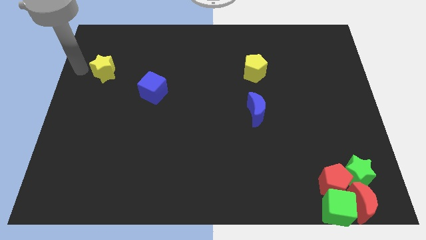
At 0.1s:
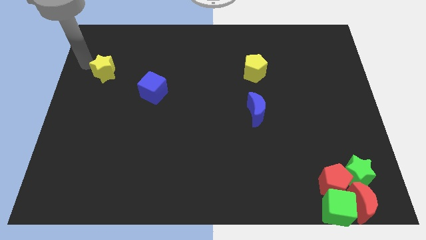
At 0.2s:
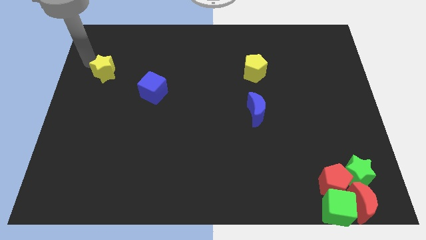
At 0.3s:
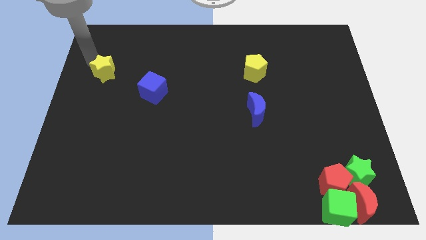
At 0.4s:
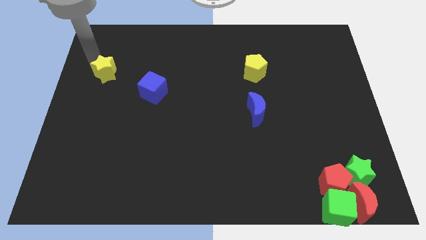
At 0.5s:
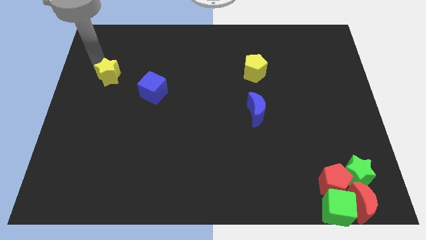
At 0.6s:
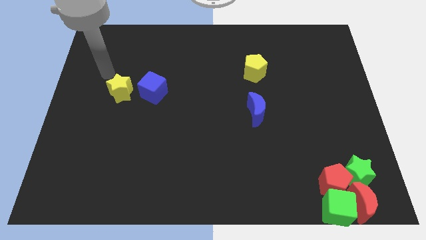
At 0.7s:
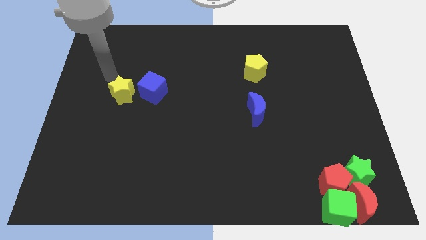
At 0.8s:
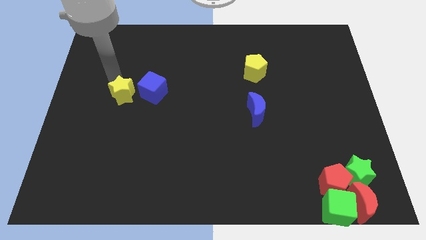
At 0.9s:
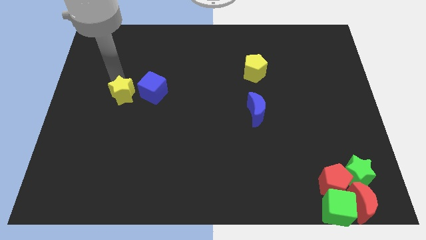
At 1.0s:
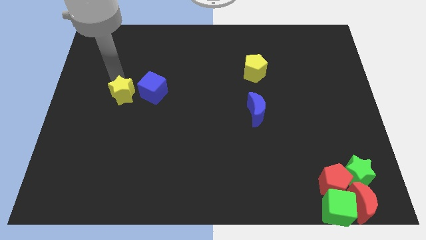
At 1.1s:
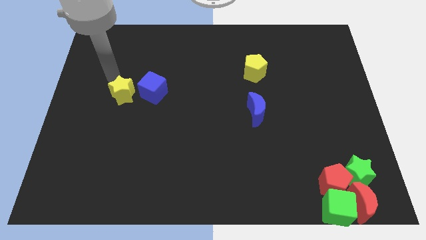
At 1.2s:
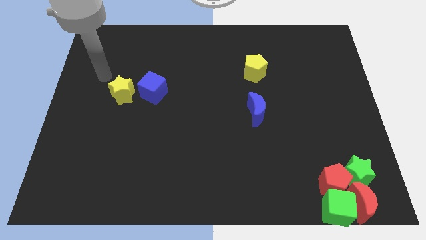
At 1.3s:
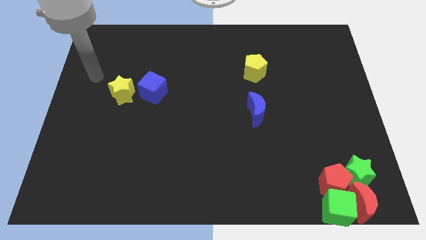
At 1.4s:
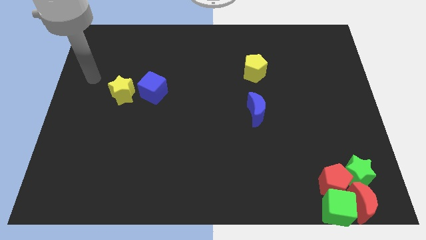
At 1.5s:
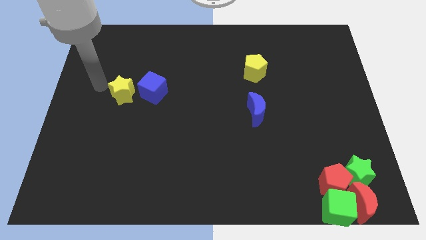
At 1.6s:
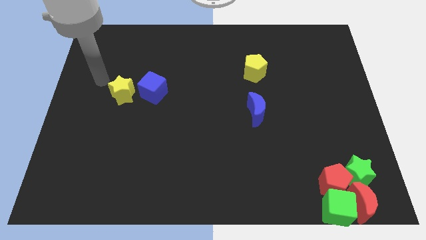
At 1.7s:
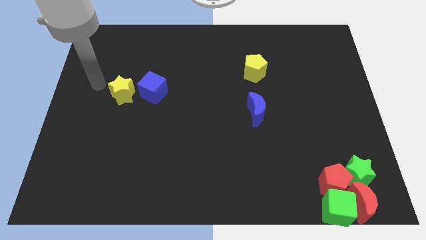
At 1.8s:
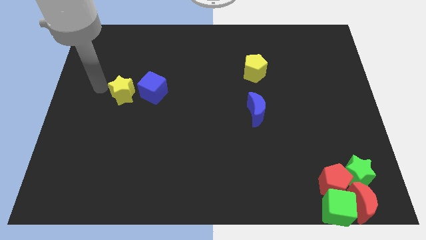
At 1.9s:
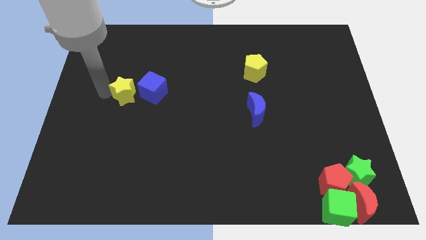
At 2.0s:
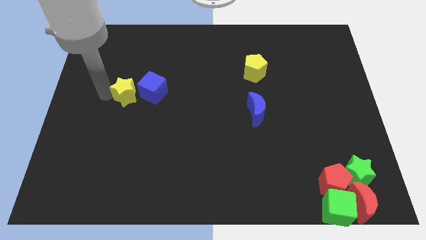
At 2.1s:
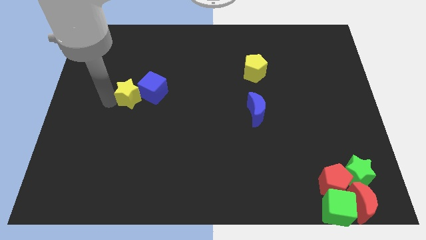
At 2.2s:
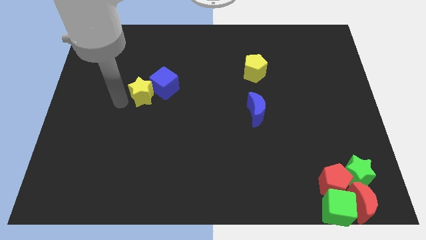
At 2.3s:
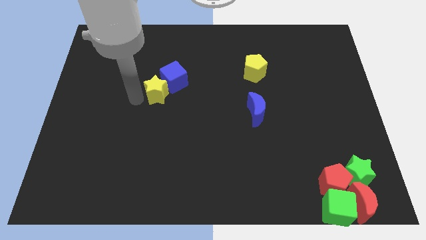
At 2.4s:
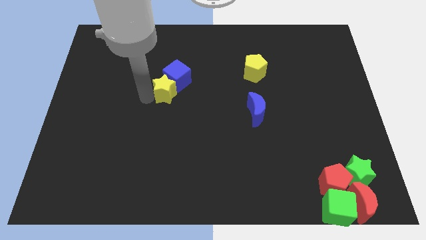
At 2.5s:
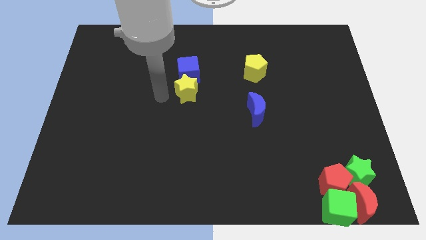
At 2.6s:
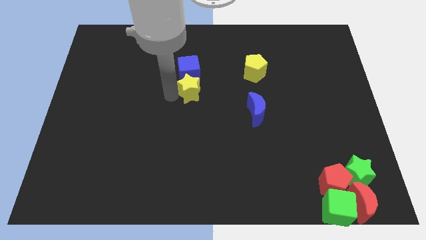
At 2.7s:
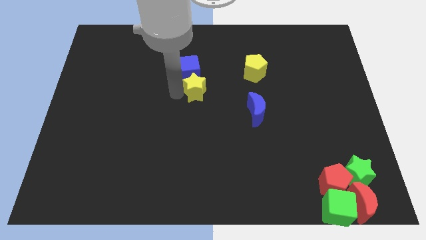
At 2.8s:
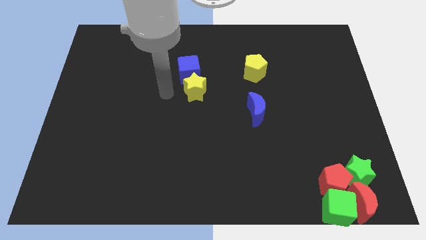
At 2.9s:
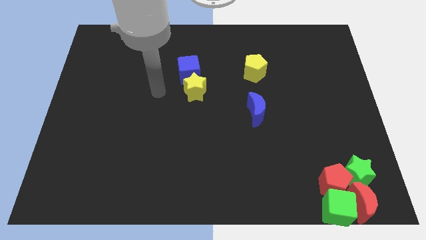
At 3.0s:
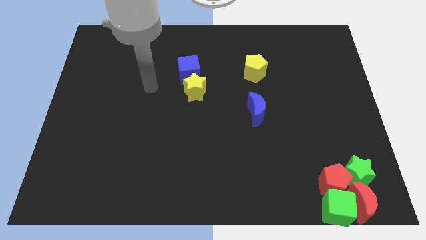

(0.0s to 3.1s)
push the yellow star and blue cube towards the yellow pentagon

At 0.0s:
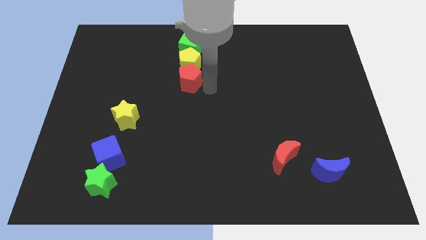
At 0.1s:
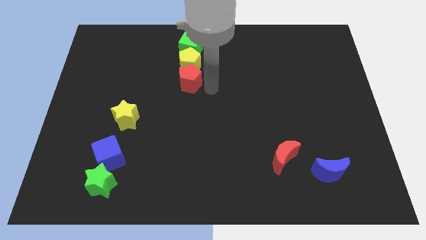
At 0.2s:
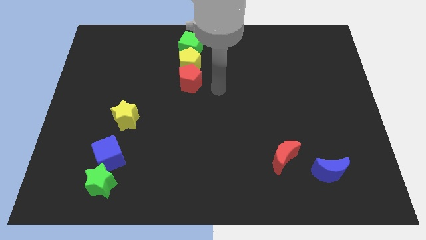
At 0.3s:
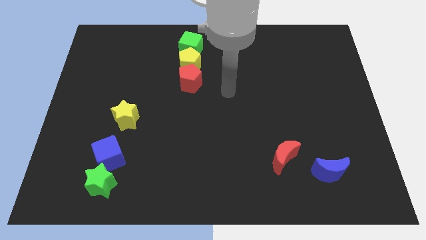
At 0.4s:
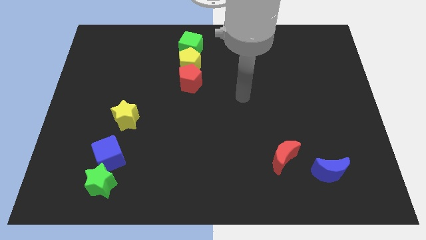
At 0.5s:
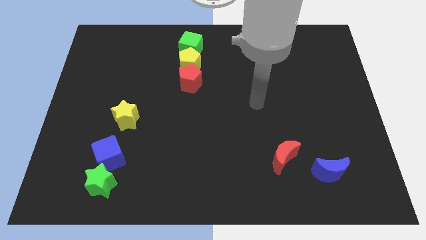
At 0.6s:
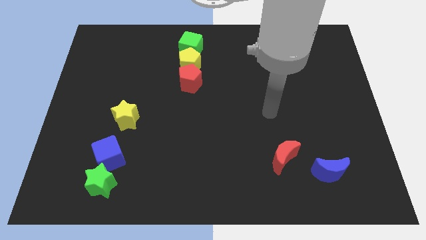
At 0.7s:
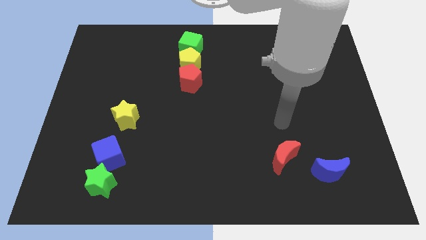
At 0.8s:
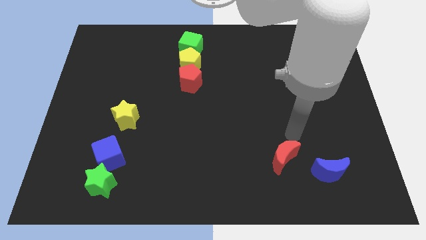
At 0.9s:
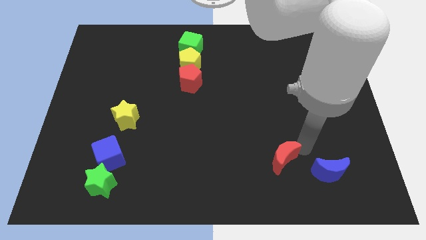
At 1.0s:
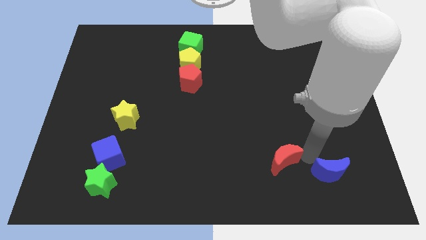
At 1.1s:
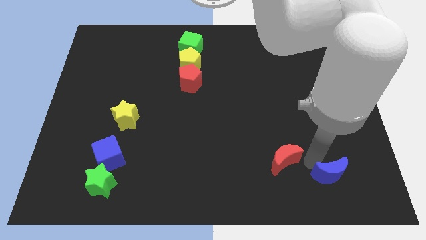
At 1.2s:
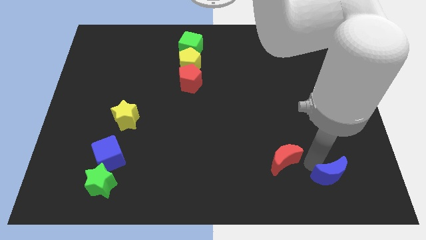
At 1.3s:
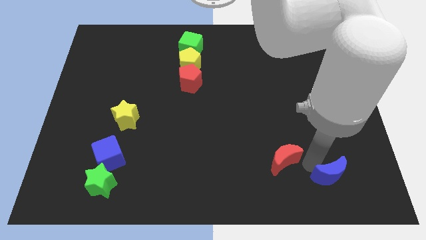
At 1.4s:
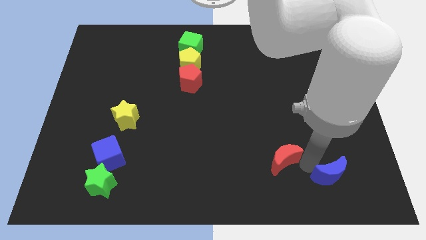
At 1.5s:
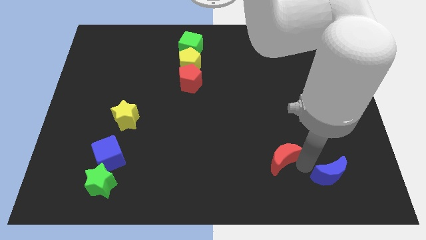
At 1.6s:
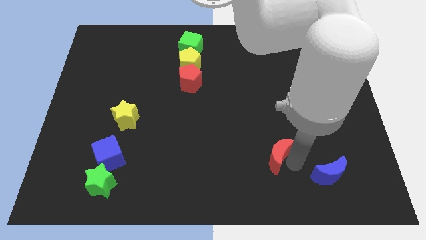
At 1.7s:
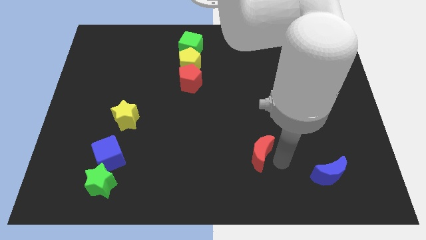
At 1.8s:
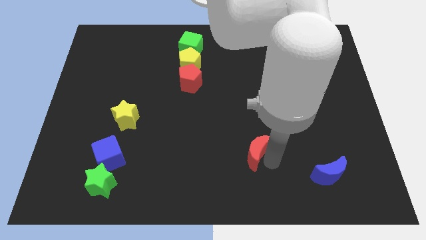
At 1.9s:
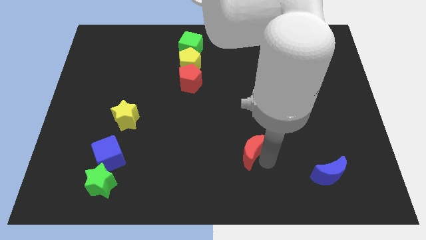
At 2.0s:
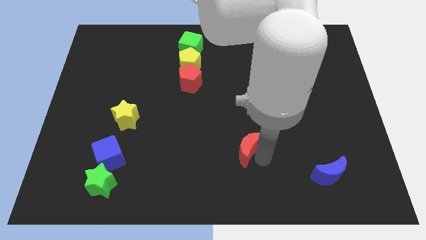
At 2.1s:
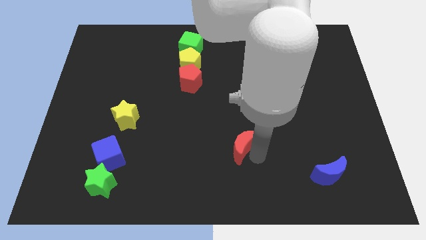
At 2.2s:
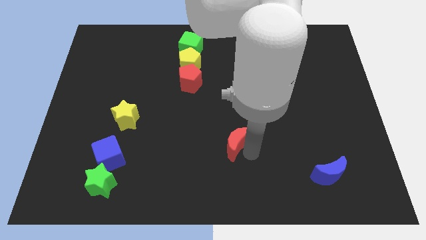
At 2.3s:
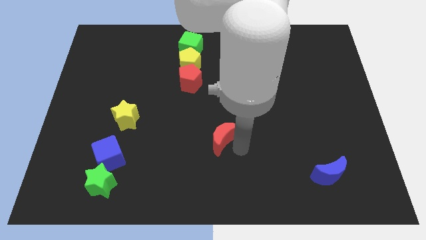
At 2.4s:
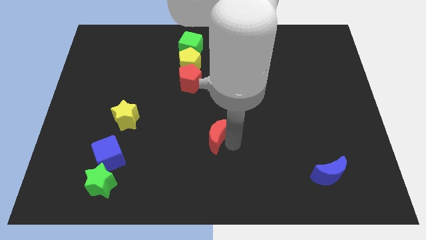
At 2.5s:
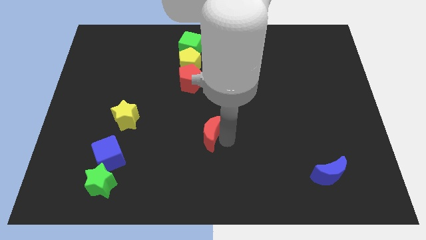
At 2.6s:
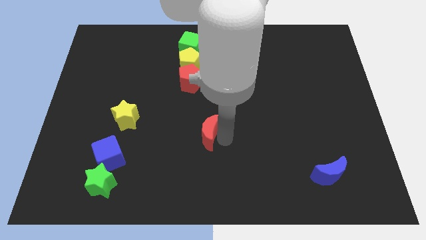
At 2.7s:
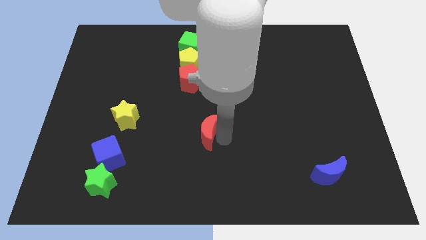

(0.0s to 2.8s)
move the arm away from the red pentagon

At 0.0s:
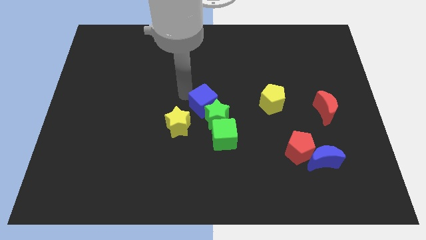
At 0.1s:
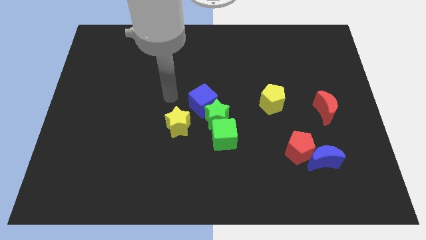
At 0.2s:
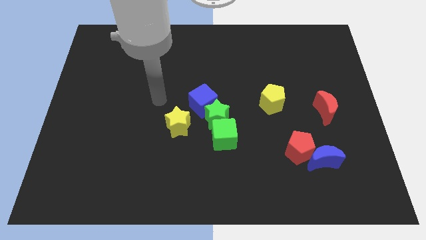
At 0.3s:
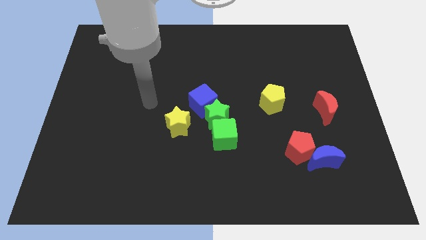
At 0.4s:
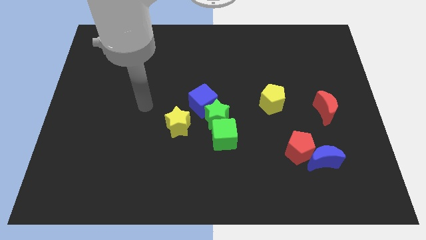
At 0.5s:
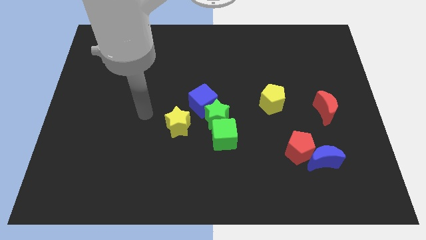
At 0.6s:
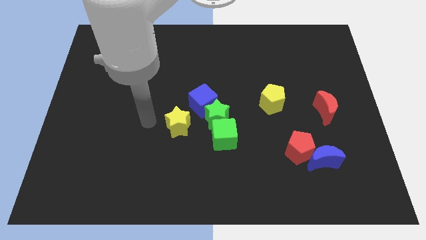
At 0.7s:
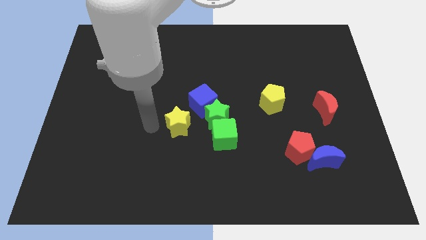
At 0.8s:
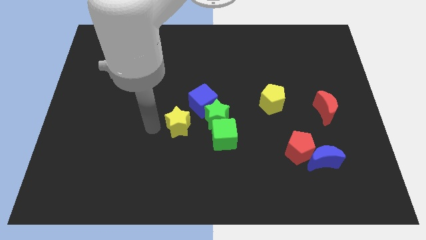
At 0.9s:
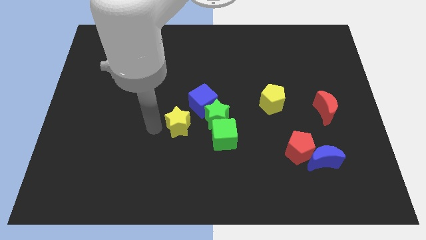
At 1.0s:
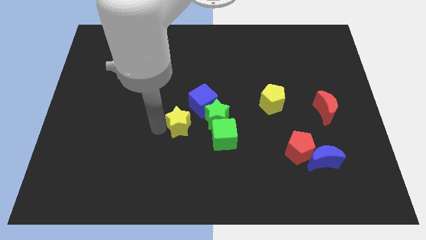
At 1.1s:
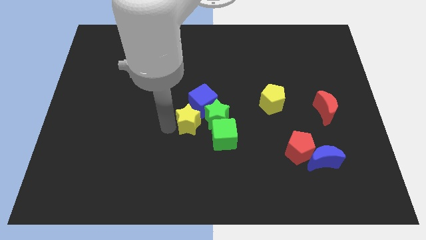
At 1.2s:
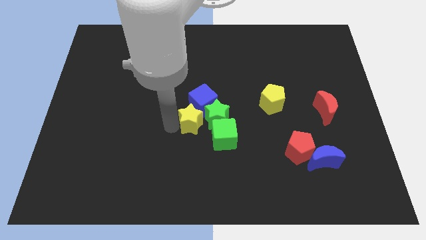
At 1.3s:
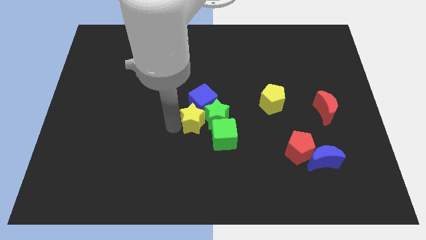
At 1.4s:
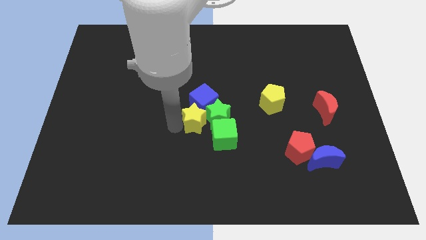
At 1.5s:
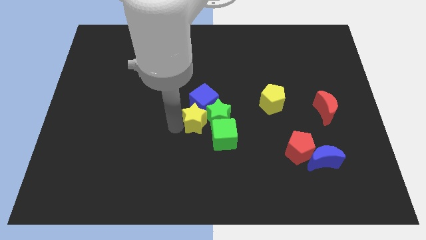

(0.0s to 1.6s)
move yellow star to the right beside green star

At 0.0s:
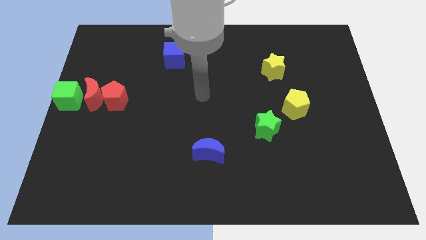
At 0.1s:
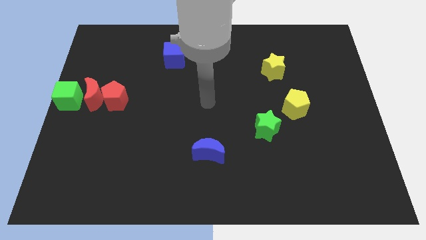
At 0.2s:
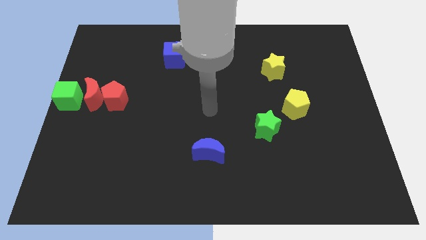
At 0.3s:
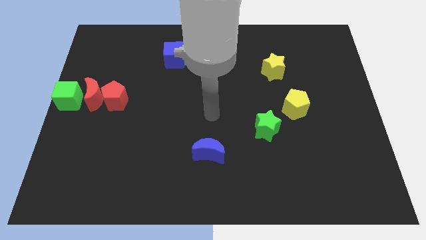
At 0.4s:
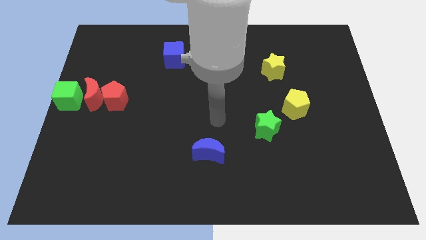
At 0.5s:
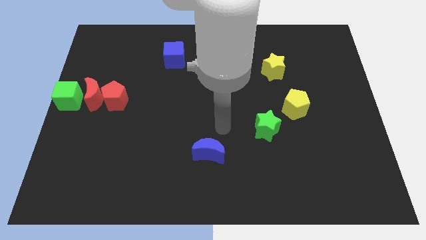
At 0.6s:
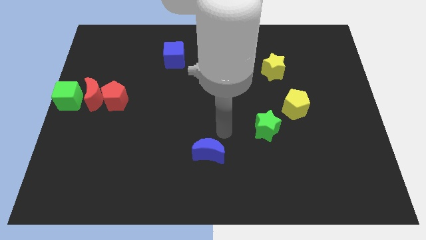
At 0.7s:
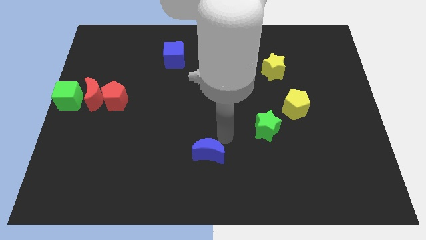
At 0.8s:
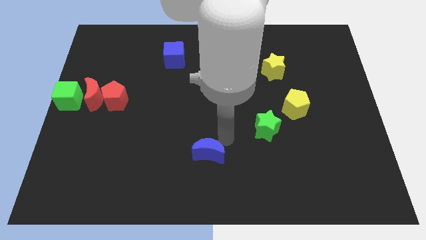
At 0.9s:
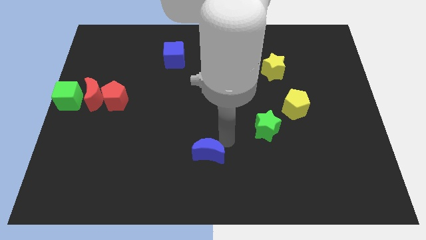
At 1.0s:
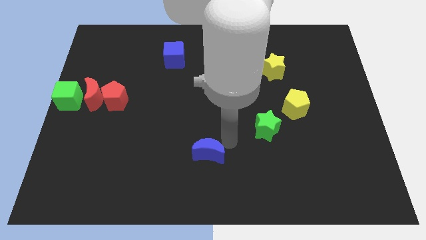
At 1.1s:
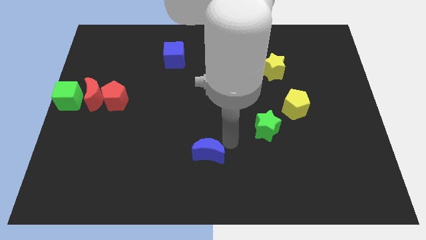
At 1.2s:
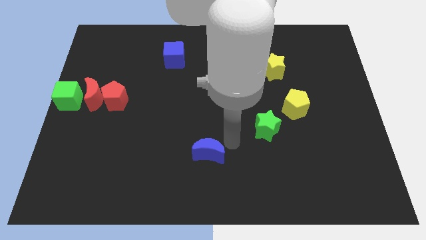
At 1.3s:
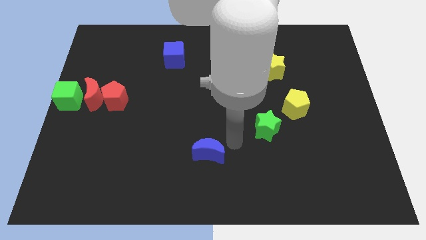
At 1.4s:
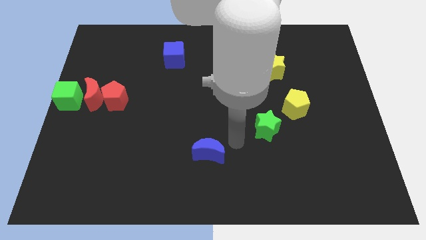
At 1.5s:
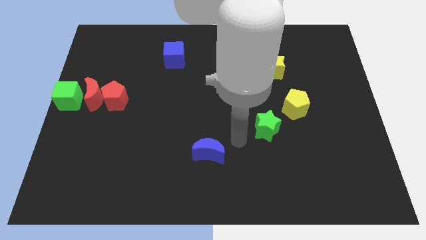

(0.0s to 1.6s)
point your arm in between the green star and blue cube
